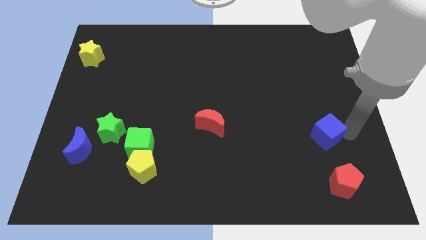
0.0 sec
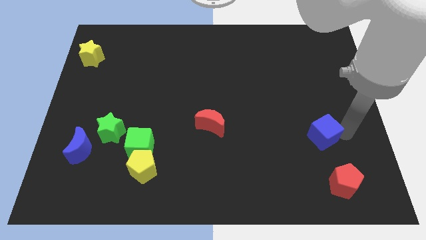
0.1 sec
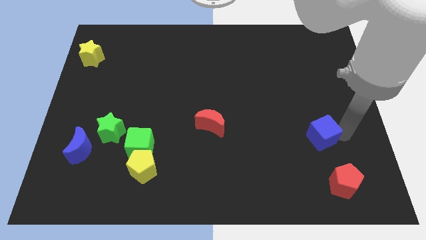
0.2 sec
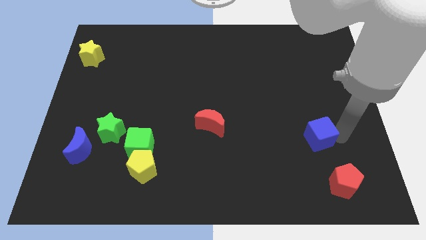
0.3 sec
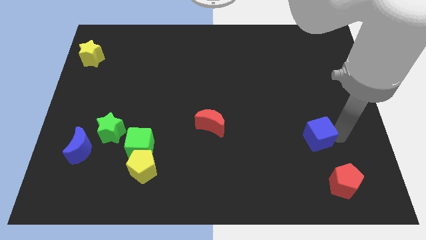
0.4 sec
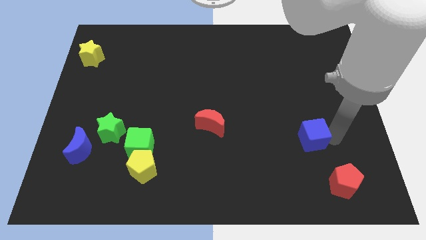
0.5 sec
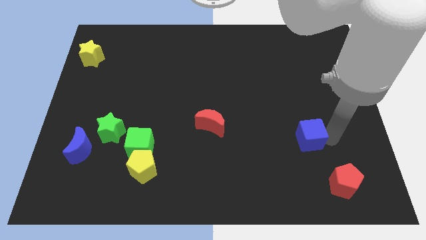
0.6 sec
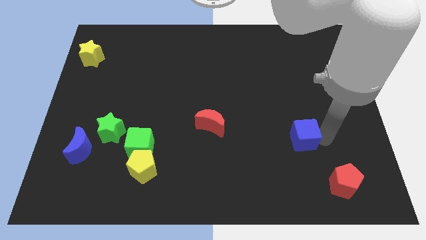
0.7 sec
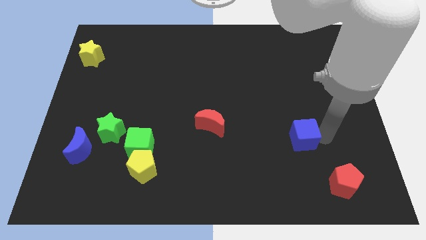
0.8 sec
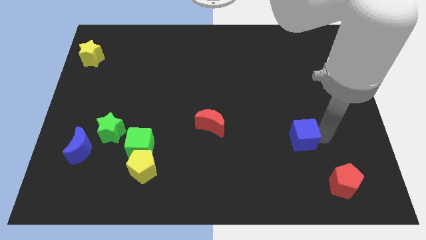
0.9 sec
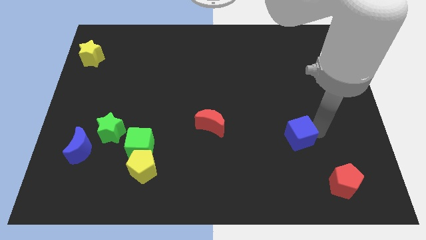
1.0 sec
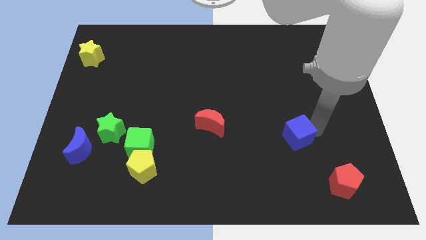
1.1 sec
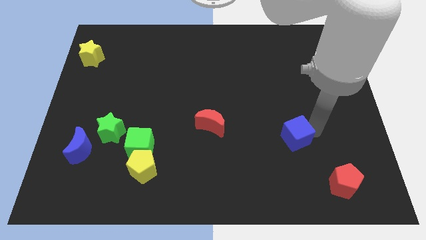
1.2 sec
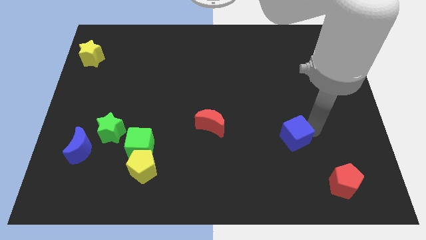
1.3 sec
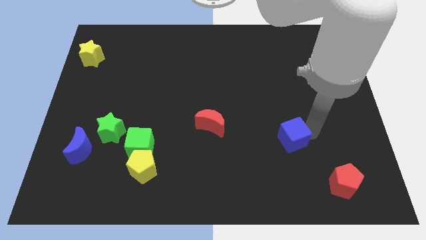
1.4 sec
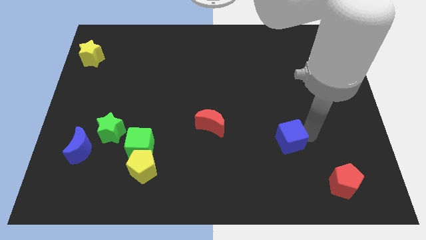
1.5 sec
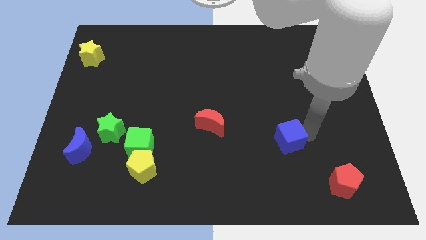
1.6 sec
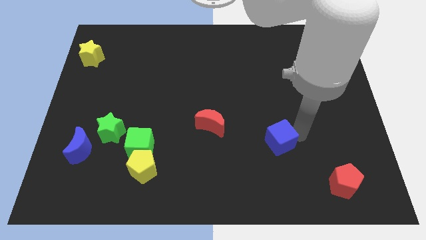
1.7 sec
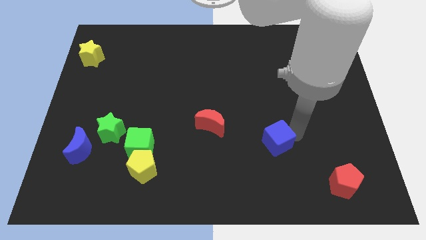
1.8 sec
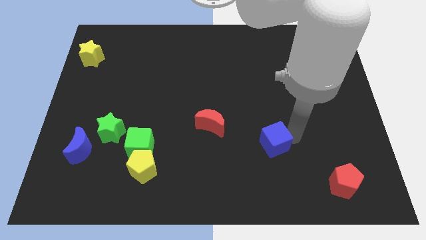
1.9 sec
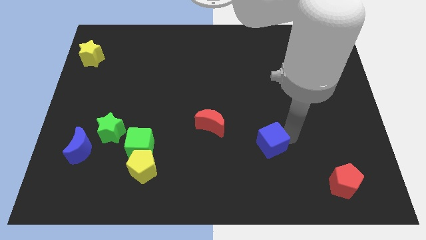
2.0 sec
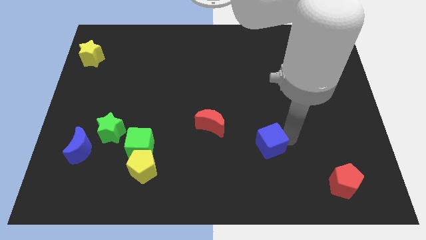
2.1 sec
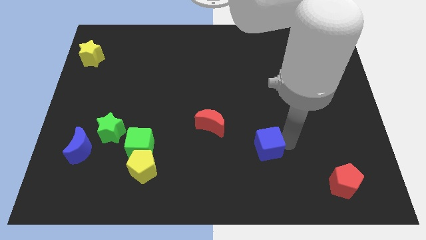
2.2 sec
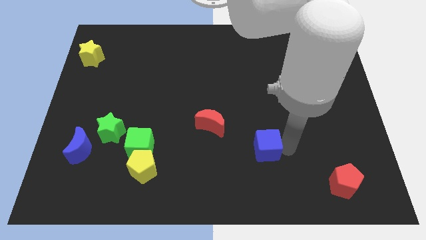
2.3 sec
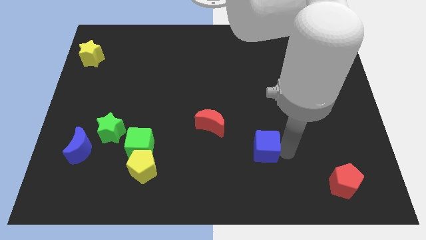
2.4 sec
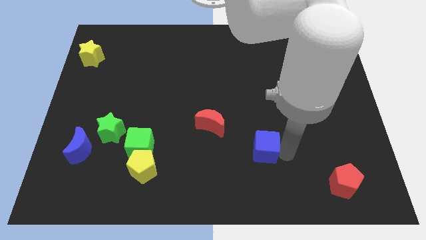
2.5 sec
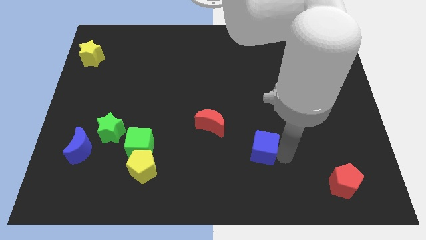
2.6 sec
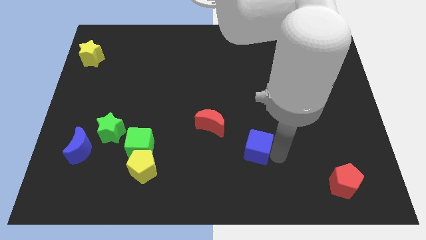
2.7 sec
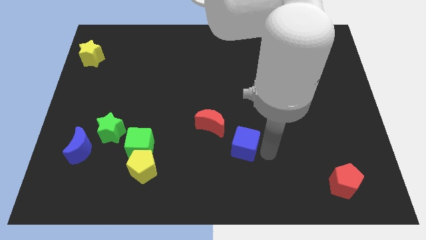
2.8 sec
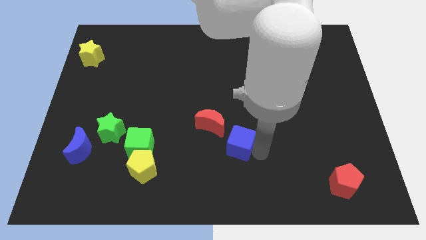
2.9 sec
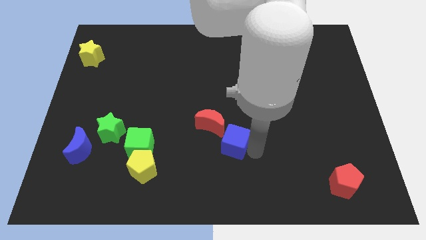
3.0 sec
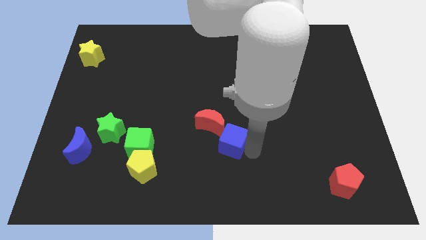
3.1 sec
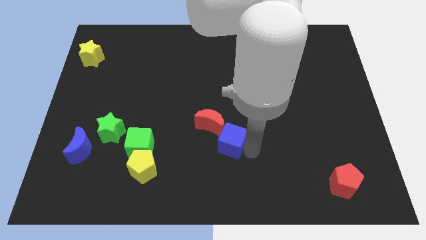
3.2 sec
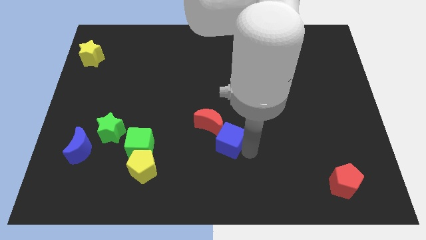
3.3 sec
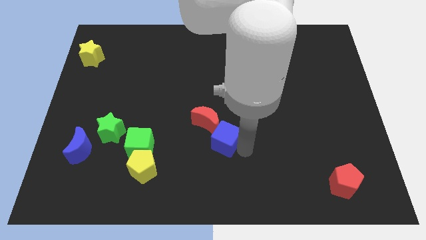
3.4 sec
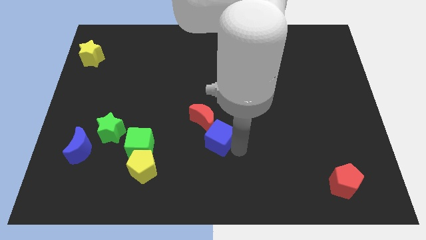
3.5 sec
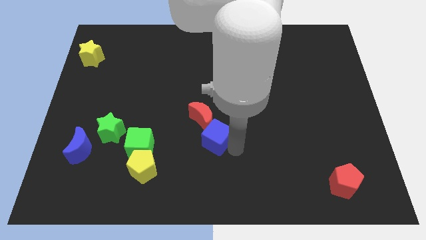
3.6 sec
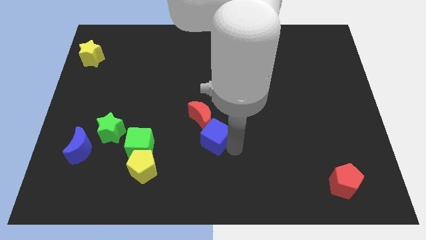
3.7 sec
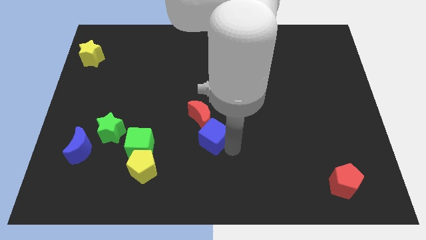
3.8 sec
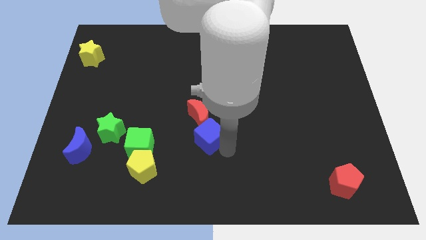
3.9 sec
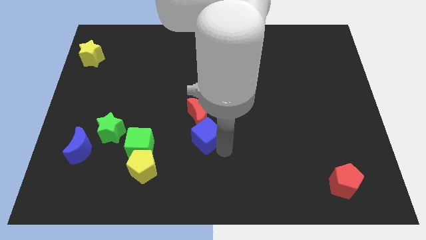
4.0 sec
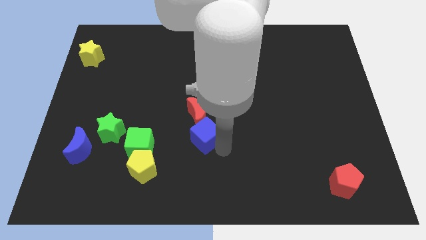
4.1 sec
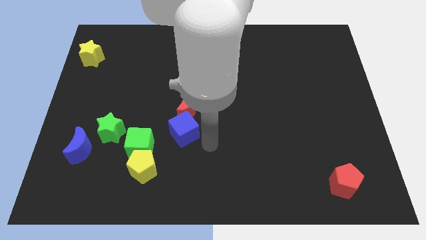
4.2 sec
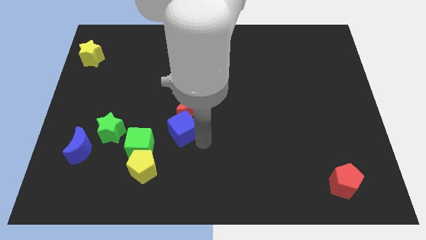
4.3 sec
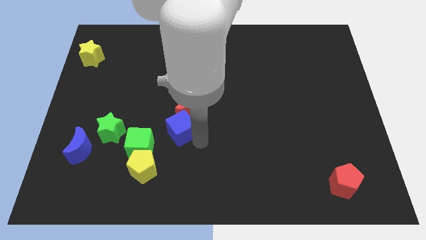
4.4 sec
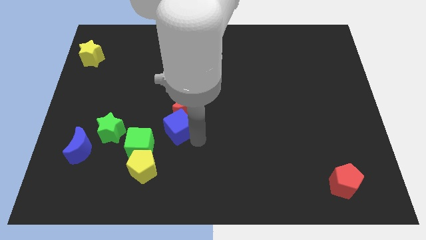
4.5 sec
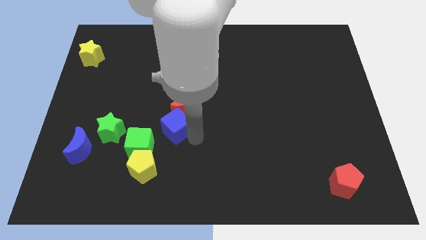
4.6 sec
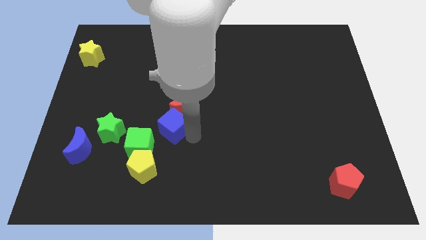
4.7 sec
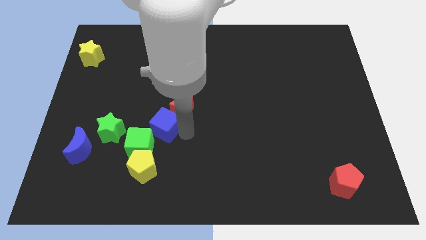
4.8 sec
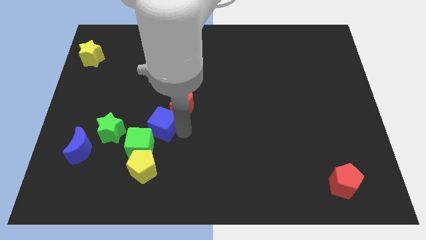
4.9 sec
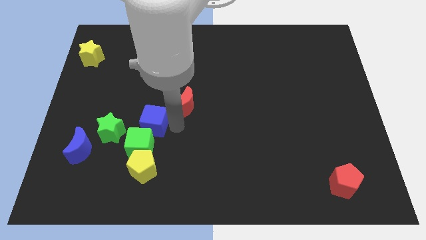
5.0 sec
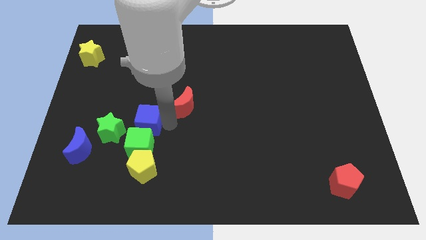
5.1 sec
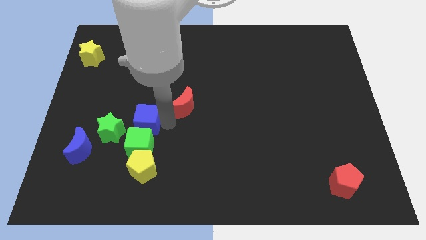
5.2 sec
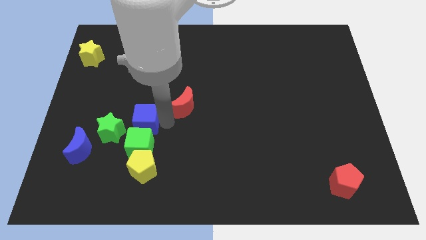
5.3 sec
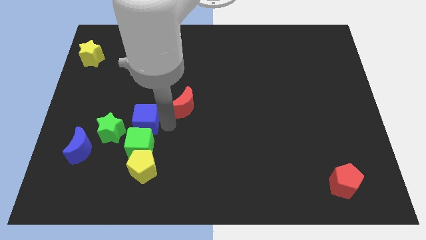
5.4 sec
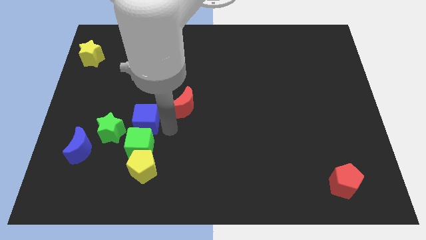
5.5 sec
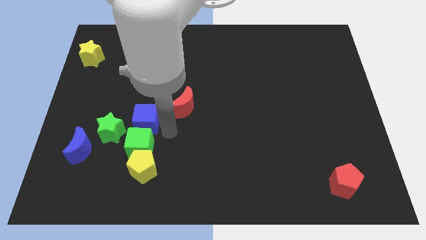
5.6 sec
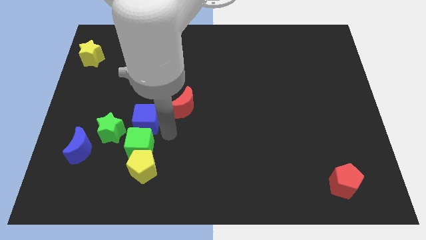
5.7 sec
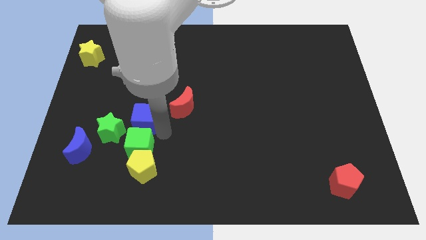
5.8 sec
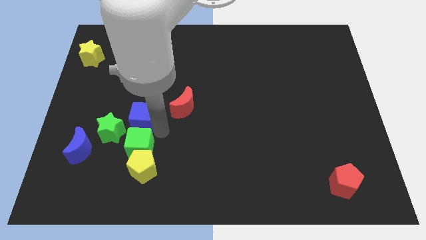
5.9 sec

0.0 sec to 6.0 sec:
place the blue cube vertically above the green cube

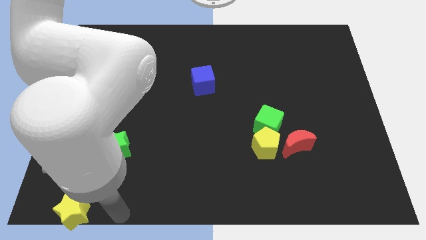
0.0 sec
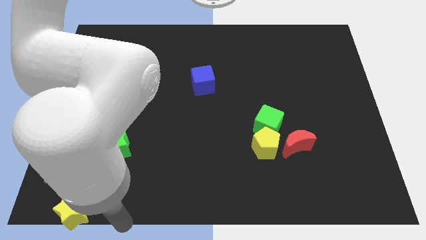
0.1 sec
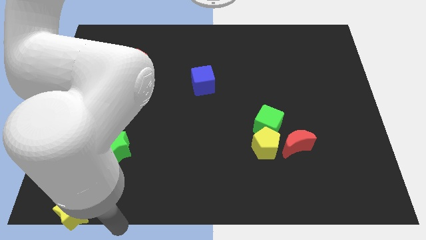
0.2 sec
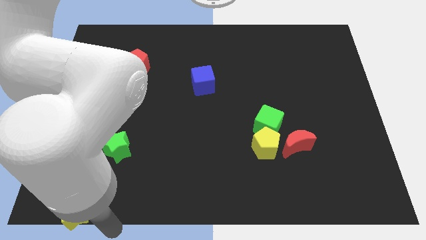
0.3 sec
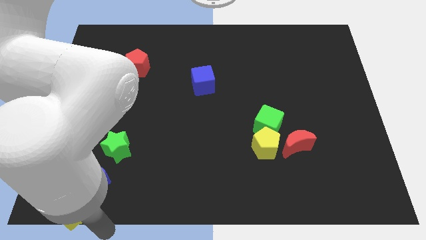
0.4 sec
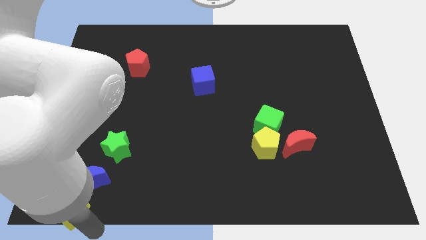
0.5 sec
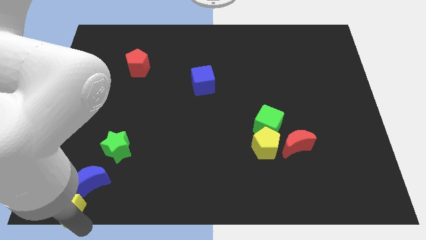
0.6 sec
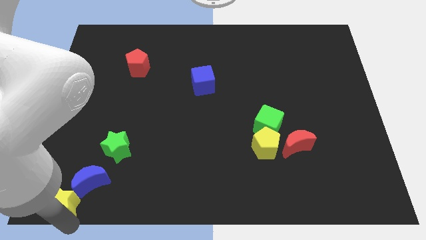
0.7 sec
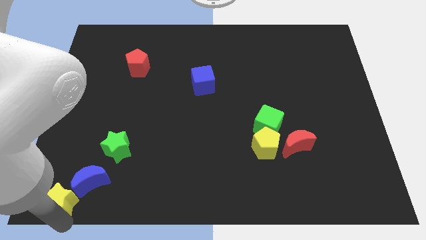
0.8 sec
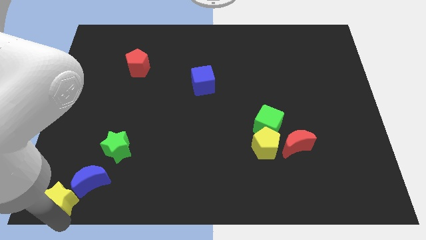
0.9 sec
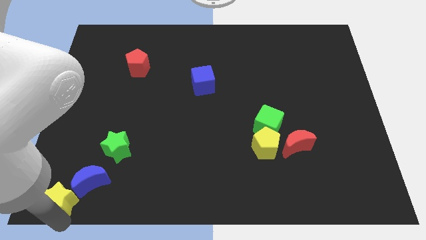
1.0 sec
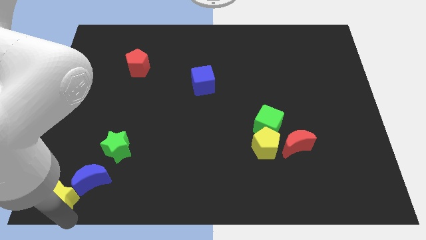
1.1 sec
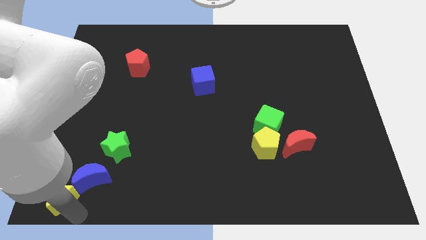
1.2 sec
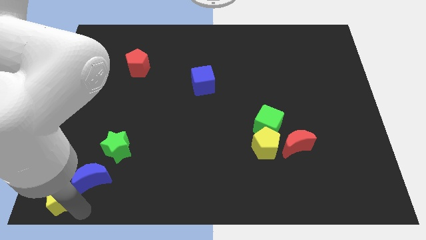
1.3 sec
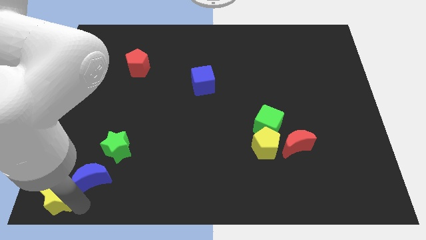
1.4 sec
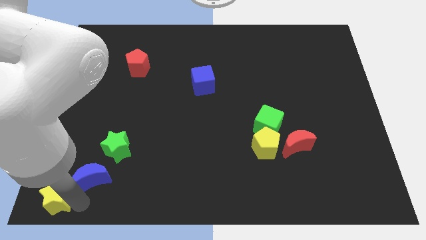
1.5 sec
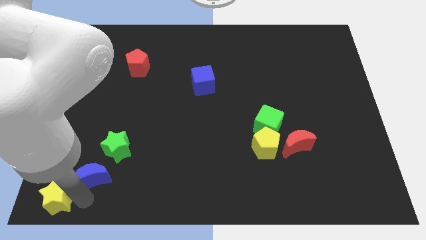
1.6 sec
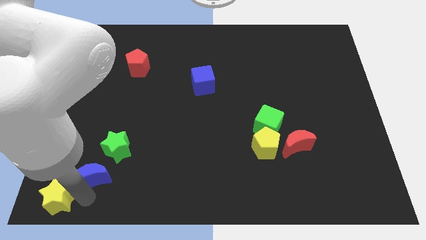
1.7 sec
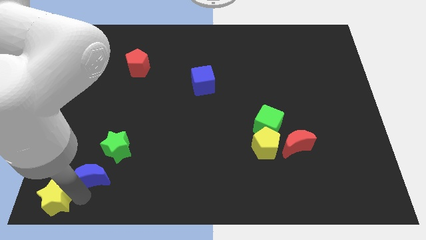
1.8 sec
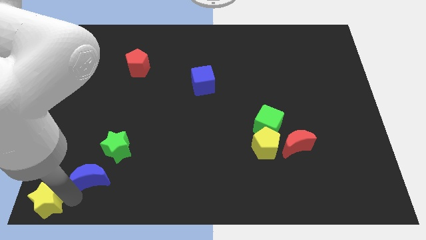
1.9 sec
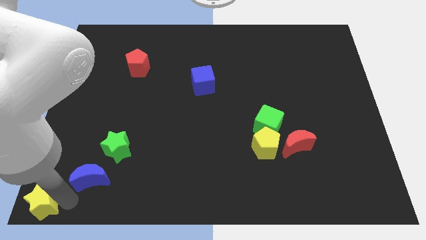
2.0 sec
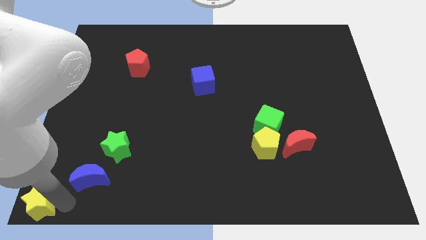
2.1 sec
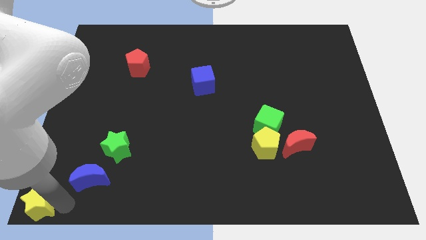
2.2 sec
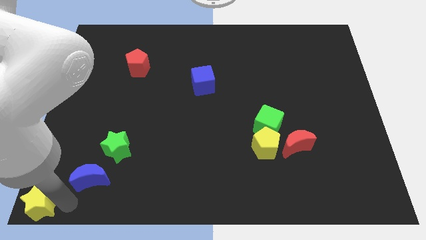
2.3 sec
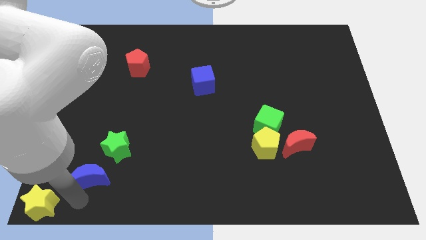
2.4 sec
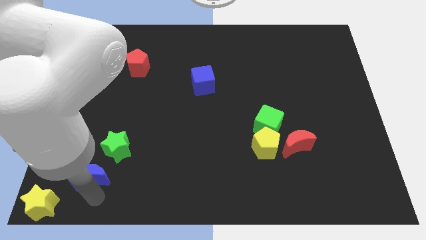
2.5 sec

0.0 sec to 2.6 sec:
move the yellow star to the bottom left corner of the board

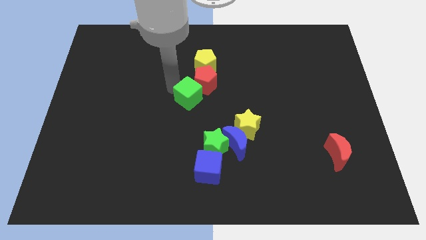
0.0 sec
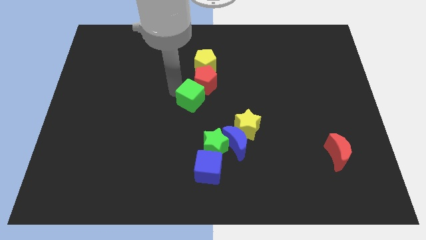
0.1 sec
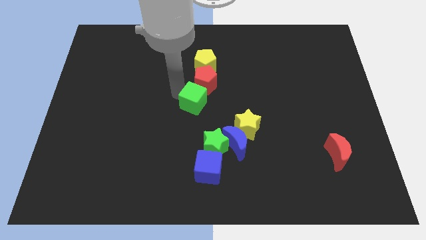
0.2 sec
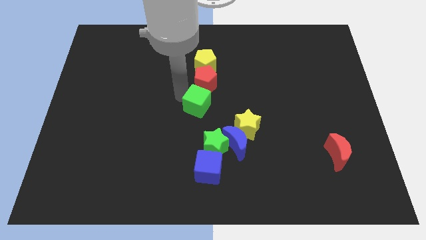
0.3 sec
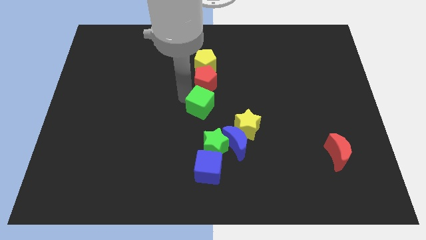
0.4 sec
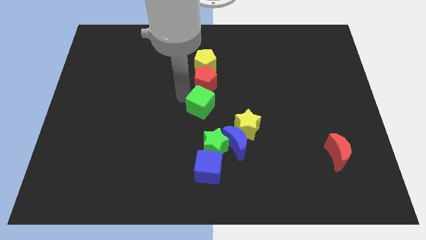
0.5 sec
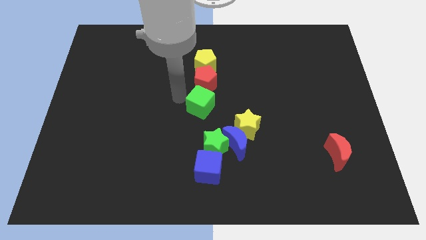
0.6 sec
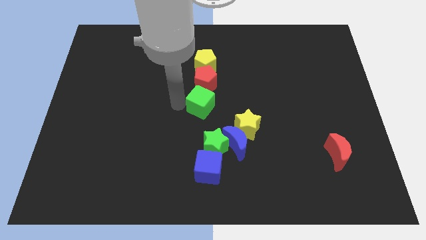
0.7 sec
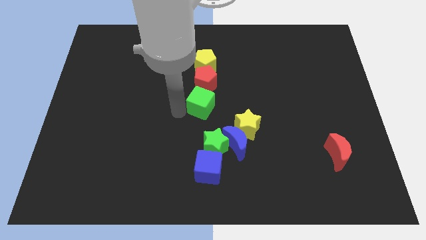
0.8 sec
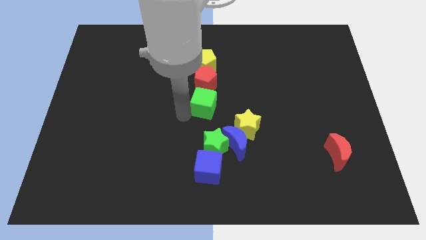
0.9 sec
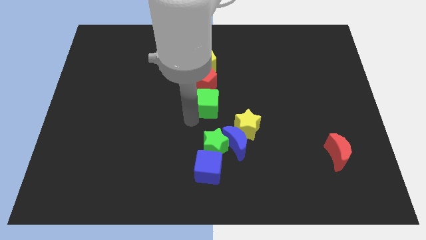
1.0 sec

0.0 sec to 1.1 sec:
place green cube to the bottom of the red pentagon
